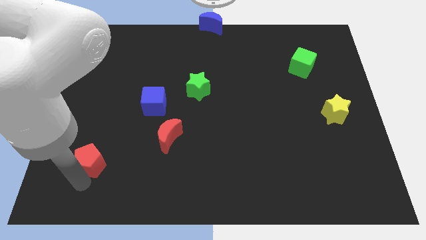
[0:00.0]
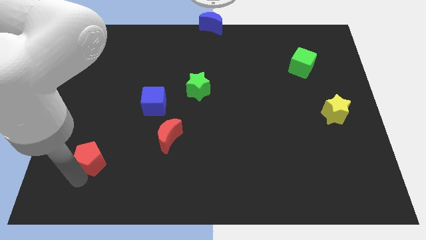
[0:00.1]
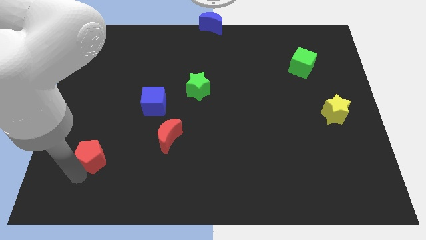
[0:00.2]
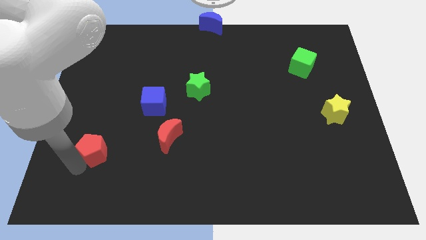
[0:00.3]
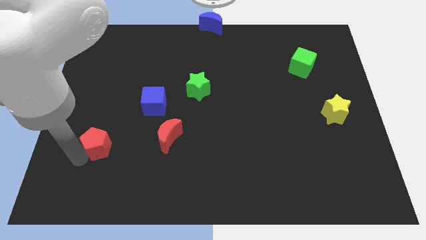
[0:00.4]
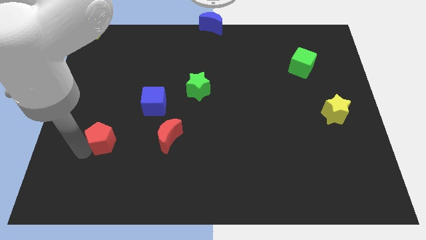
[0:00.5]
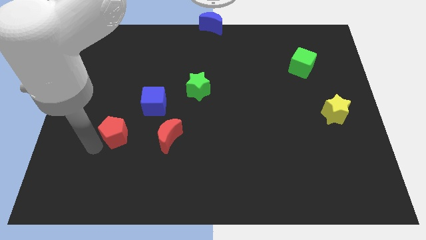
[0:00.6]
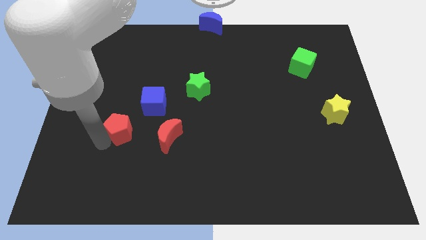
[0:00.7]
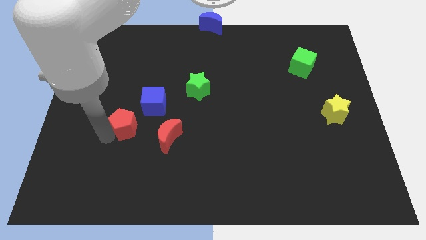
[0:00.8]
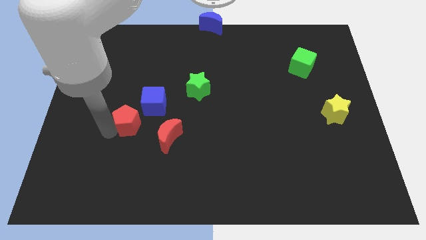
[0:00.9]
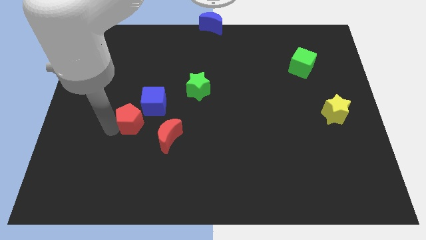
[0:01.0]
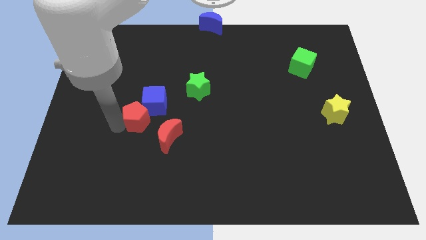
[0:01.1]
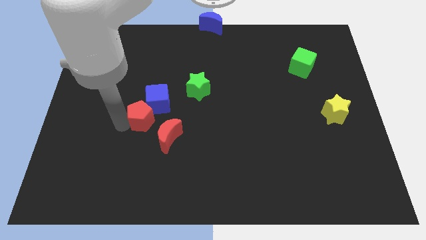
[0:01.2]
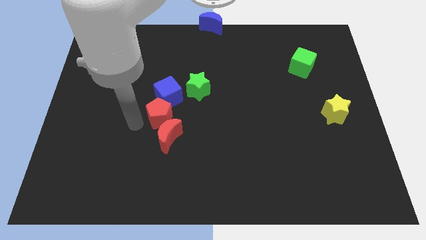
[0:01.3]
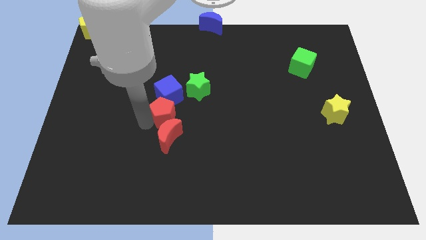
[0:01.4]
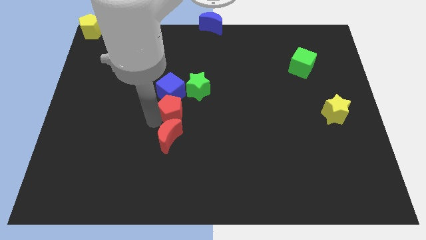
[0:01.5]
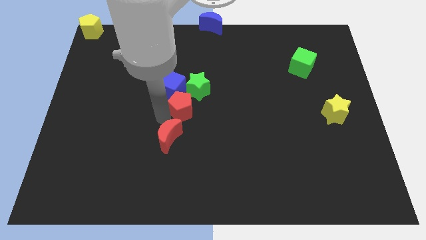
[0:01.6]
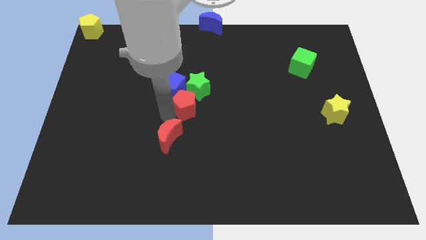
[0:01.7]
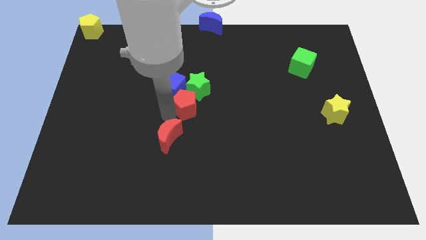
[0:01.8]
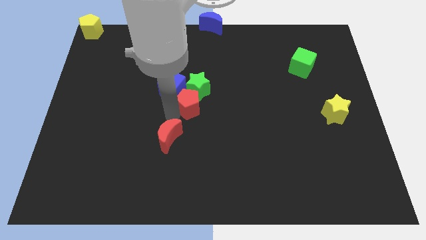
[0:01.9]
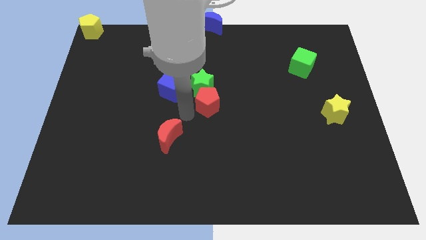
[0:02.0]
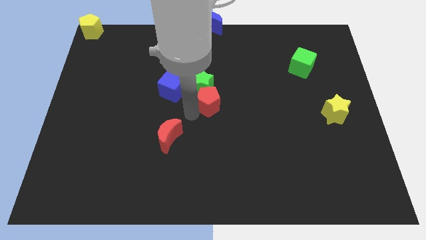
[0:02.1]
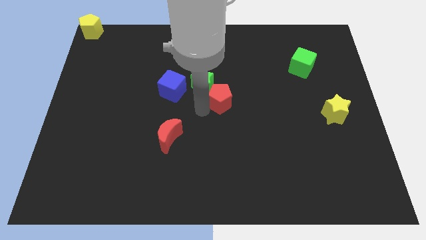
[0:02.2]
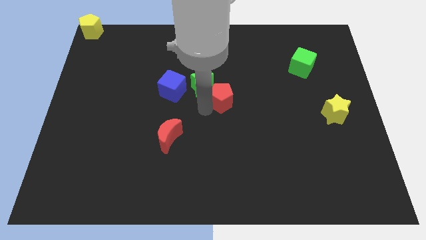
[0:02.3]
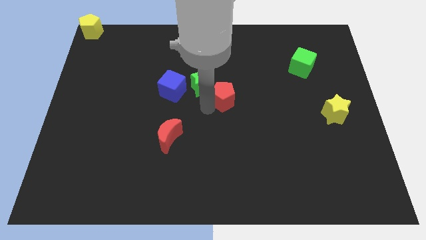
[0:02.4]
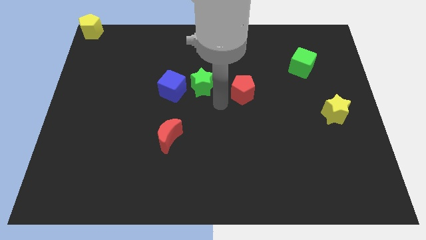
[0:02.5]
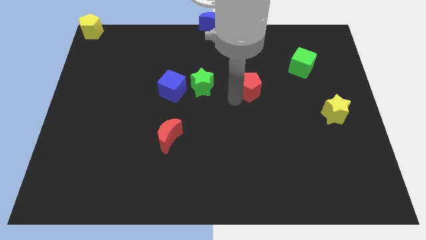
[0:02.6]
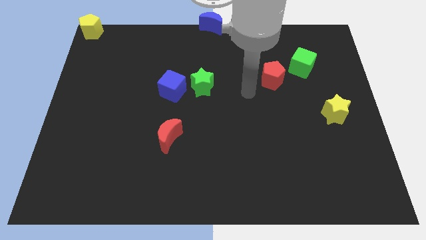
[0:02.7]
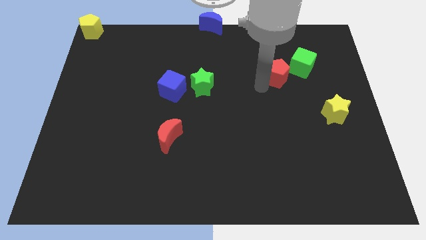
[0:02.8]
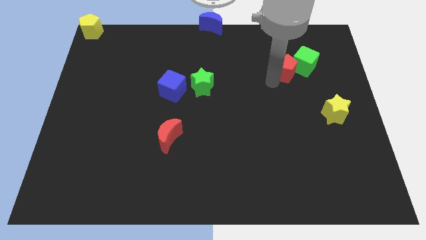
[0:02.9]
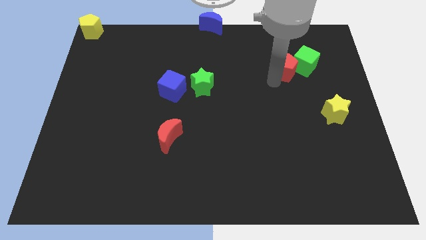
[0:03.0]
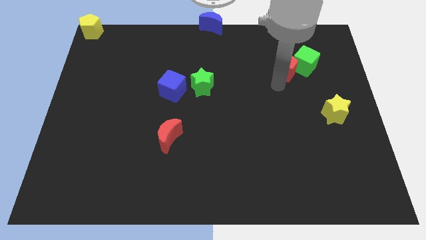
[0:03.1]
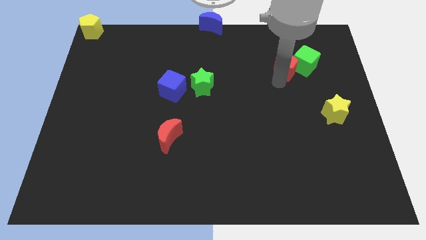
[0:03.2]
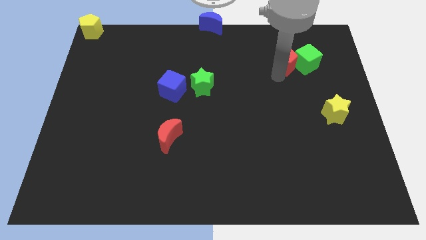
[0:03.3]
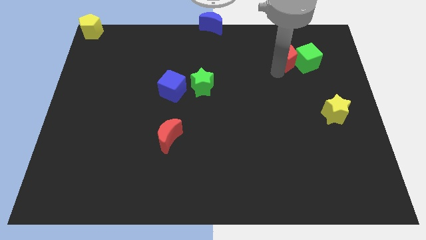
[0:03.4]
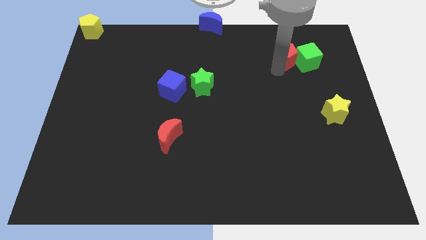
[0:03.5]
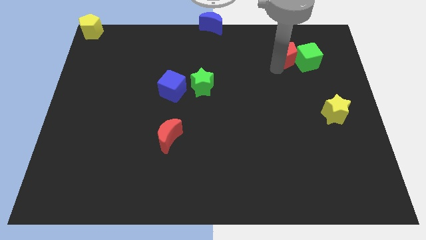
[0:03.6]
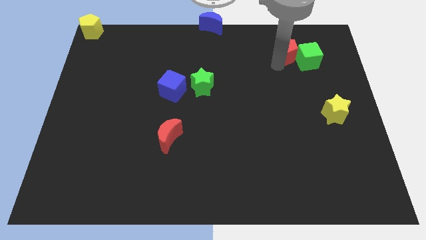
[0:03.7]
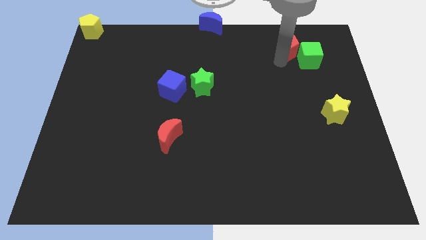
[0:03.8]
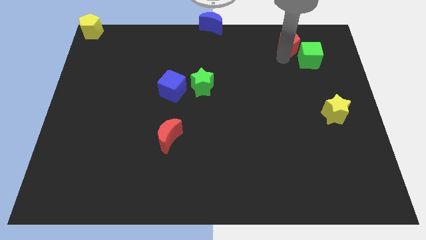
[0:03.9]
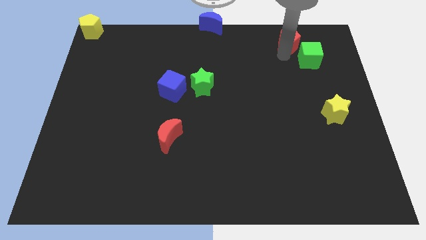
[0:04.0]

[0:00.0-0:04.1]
move the red pentagon into the green cube

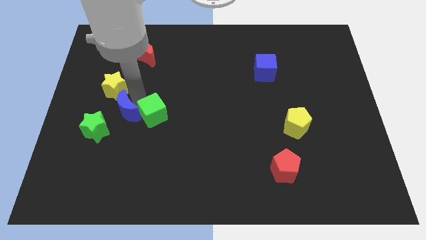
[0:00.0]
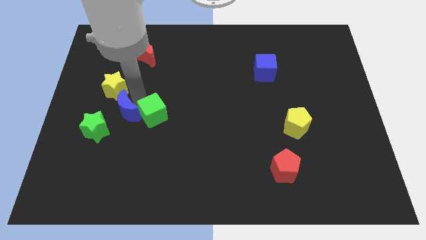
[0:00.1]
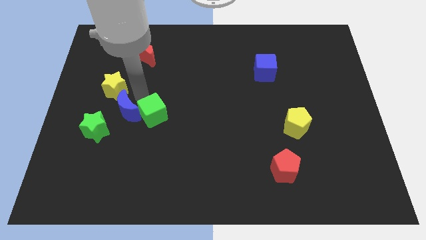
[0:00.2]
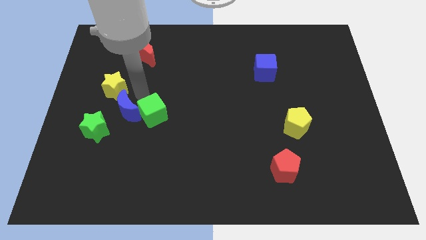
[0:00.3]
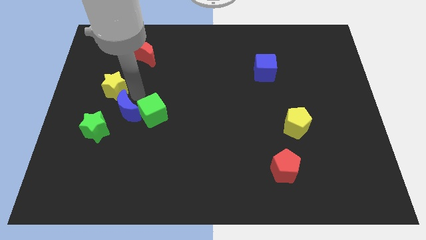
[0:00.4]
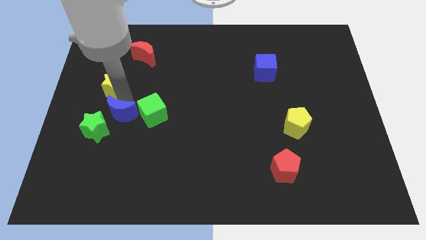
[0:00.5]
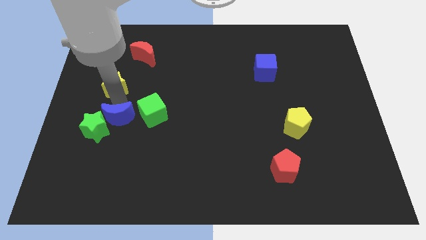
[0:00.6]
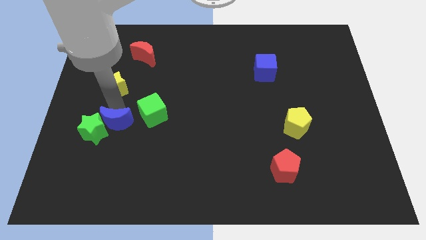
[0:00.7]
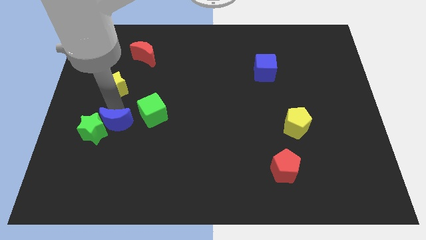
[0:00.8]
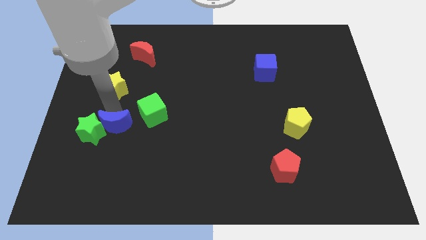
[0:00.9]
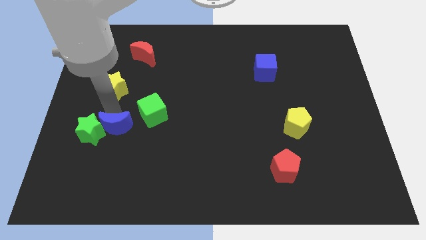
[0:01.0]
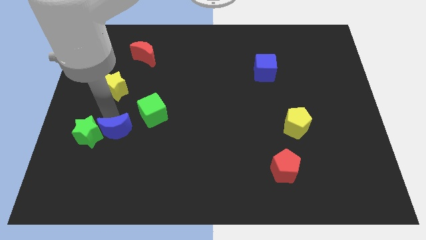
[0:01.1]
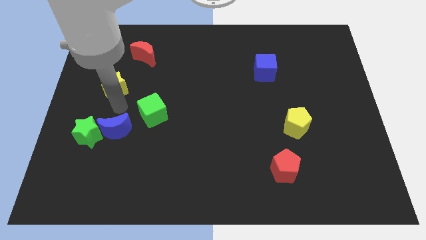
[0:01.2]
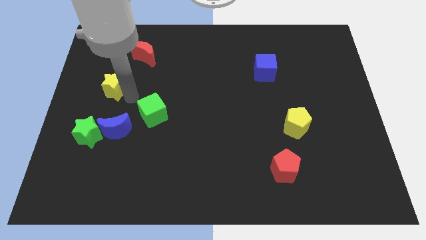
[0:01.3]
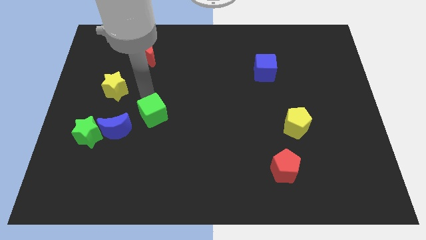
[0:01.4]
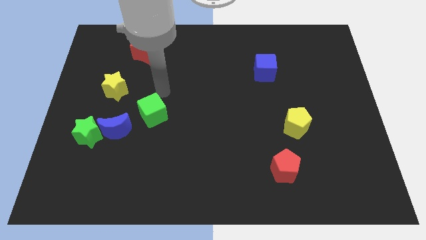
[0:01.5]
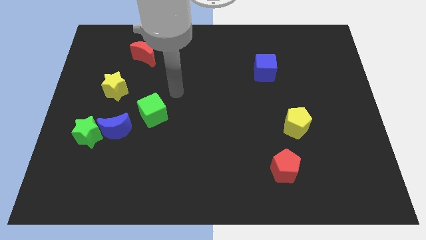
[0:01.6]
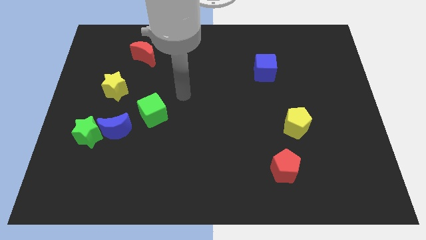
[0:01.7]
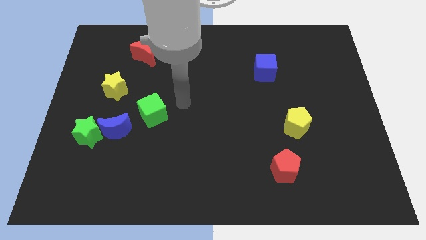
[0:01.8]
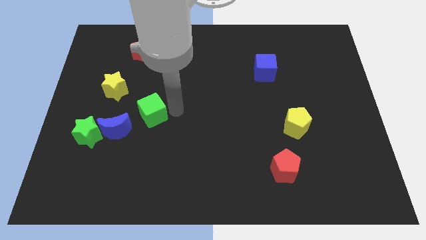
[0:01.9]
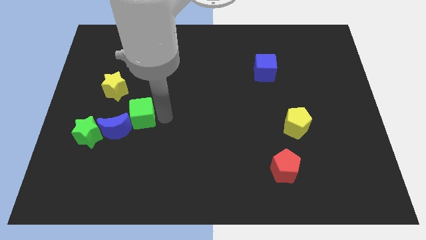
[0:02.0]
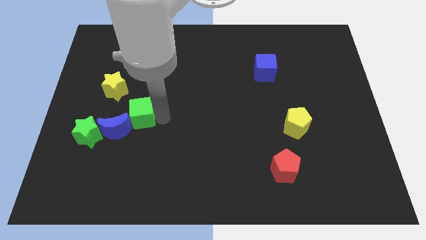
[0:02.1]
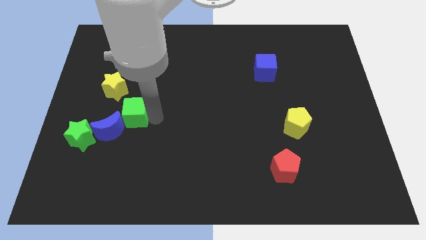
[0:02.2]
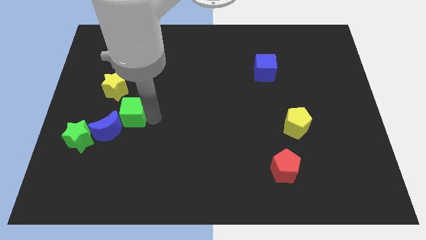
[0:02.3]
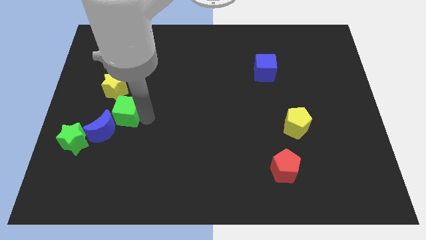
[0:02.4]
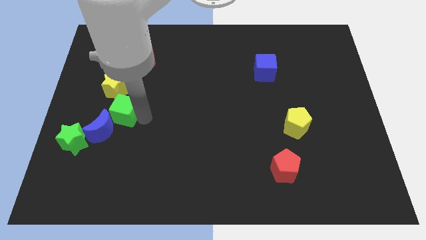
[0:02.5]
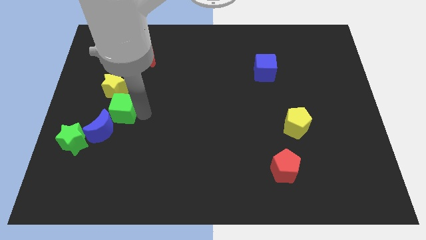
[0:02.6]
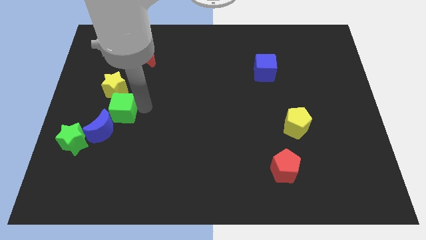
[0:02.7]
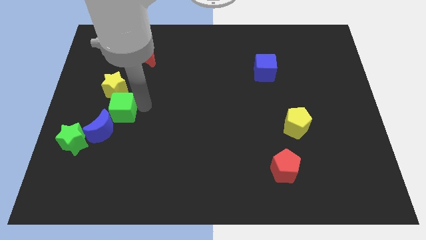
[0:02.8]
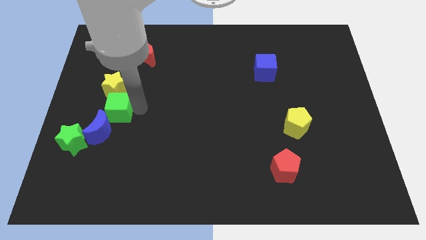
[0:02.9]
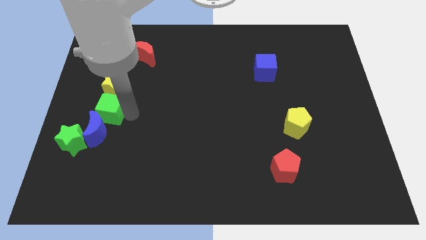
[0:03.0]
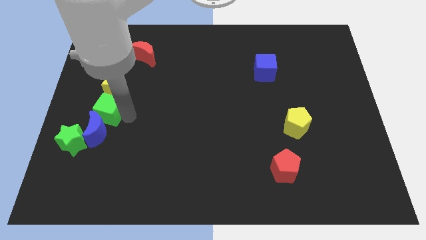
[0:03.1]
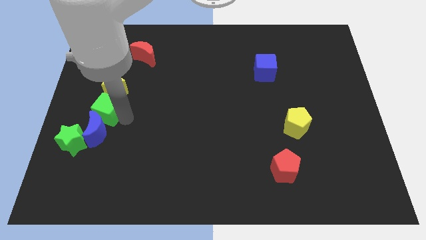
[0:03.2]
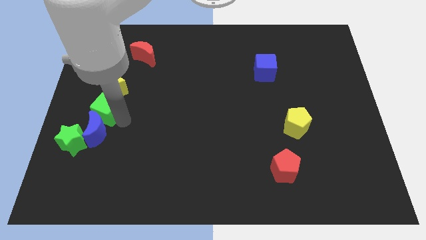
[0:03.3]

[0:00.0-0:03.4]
adjust the blue moon in between the green blocks

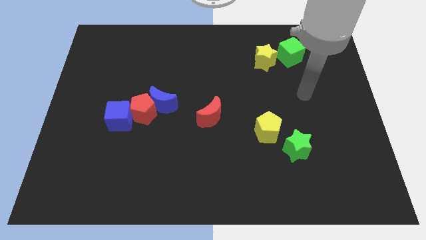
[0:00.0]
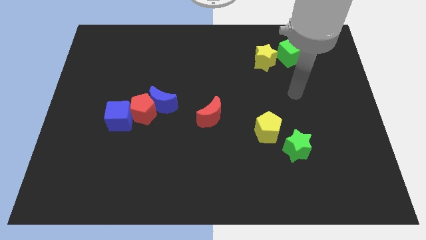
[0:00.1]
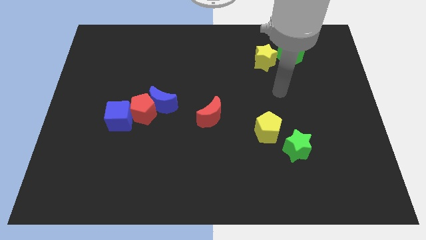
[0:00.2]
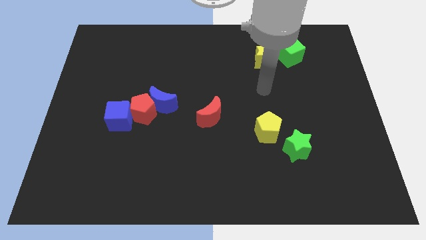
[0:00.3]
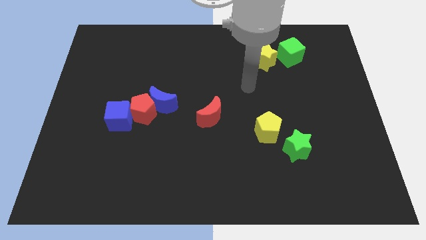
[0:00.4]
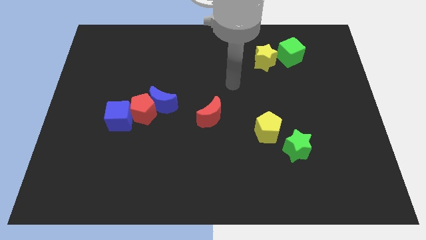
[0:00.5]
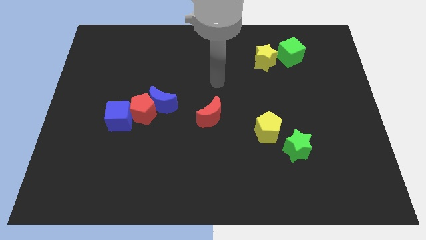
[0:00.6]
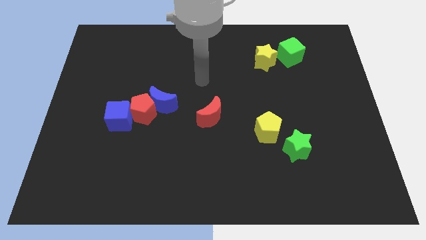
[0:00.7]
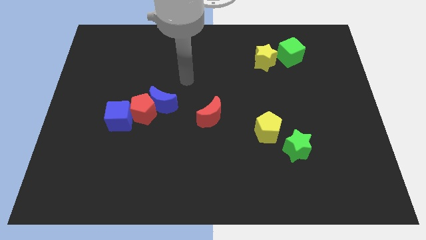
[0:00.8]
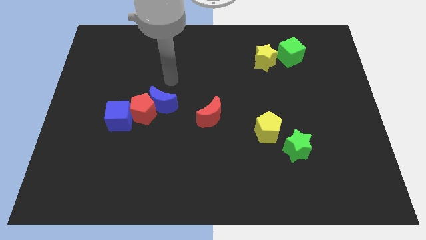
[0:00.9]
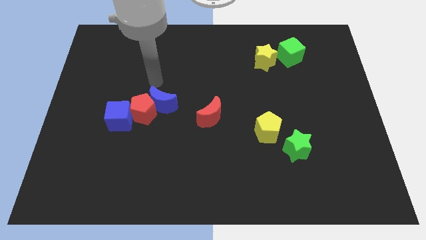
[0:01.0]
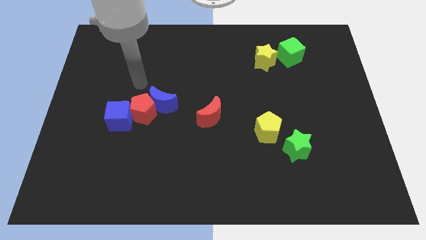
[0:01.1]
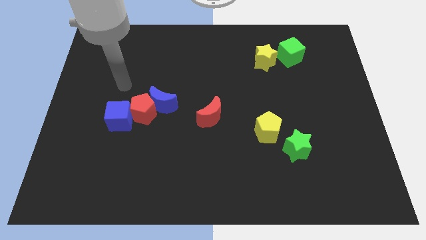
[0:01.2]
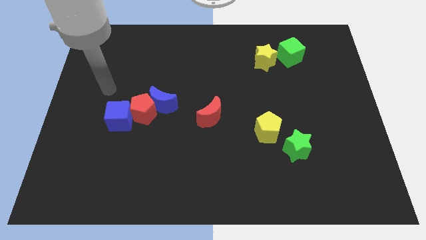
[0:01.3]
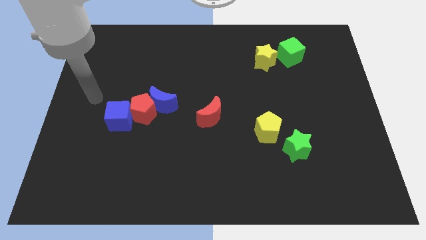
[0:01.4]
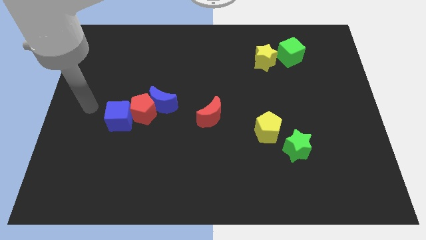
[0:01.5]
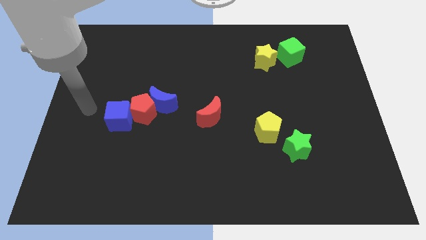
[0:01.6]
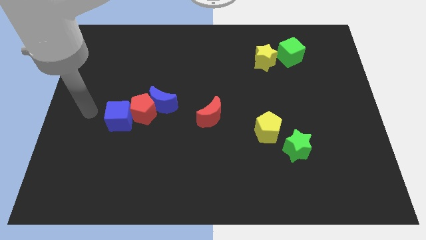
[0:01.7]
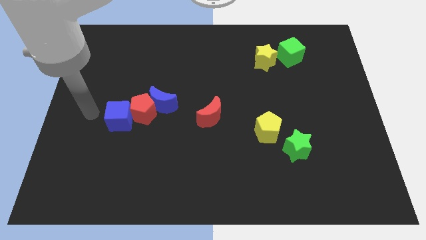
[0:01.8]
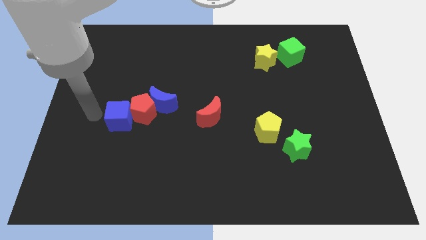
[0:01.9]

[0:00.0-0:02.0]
move your arm to the left of the blue block
